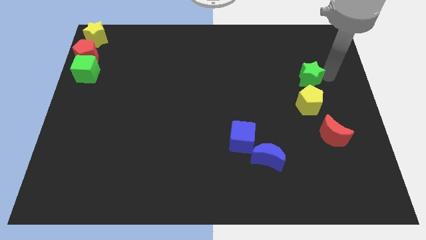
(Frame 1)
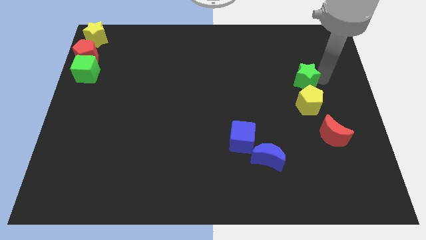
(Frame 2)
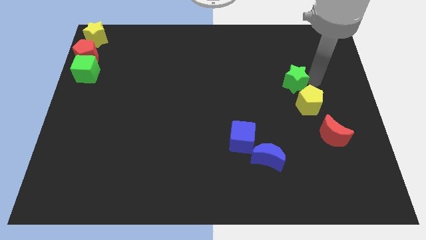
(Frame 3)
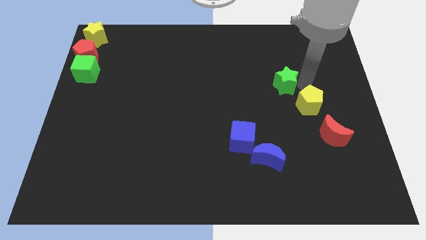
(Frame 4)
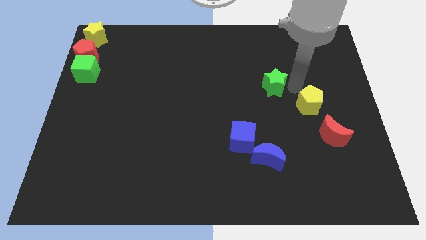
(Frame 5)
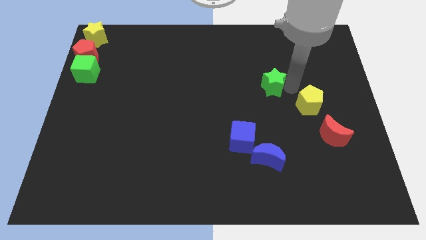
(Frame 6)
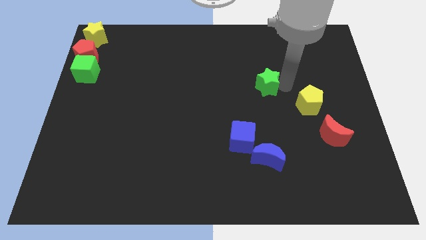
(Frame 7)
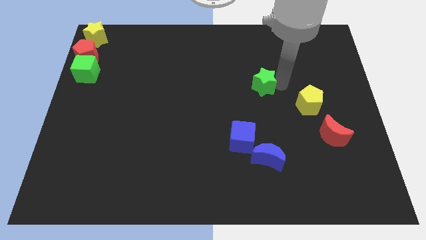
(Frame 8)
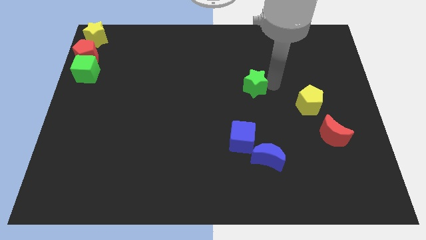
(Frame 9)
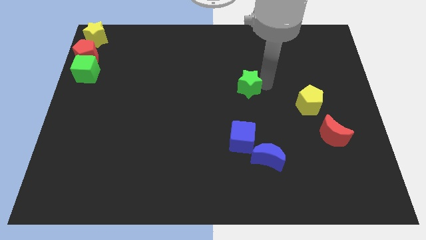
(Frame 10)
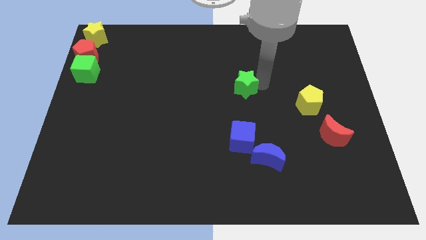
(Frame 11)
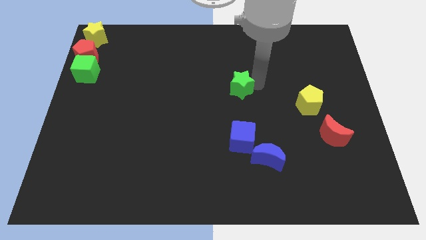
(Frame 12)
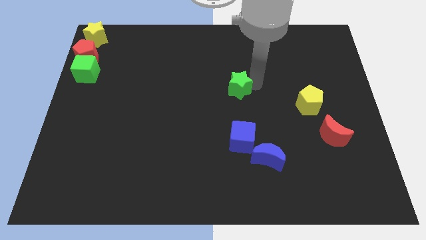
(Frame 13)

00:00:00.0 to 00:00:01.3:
move the green star to the top of the blue cube

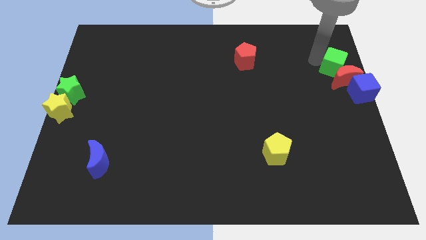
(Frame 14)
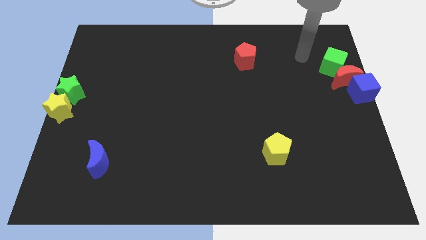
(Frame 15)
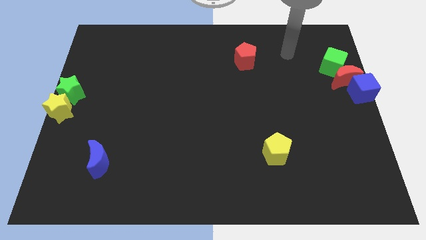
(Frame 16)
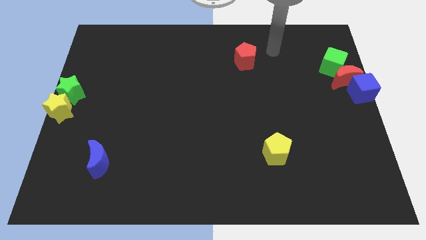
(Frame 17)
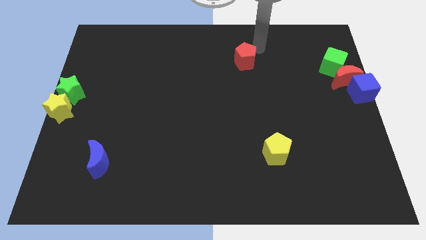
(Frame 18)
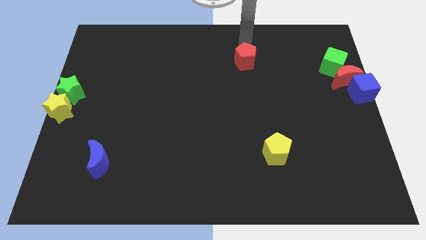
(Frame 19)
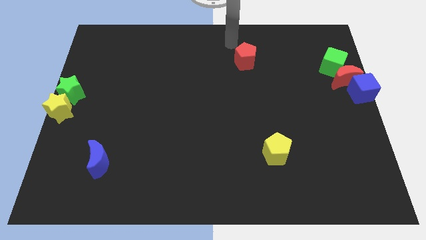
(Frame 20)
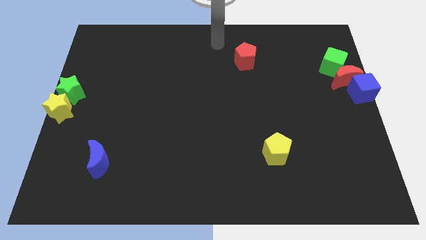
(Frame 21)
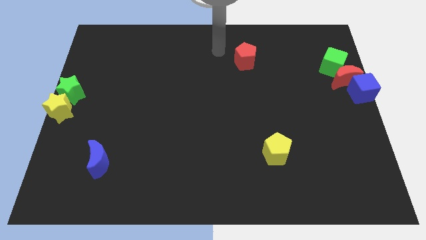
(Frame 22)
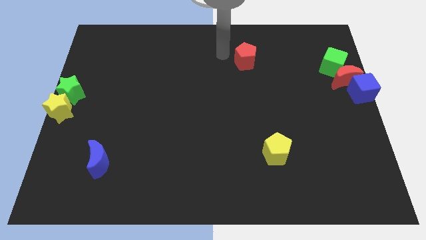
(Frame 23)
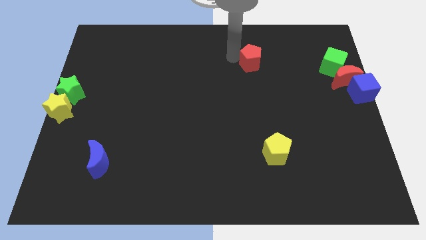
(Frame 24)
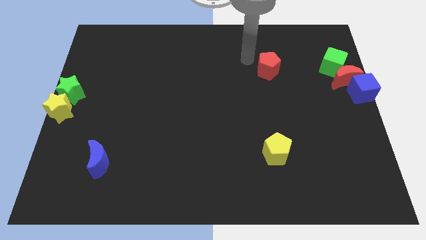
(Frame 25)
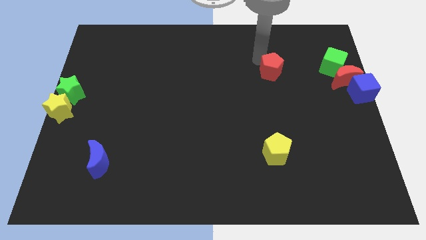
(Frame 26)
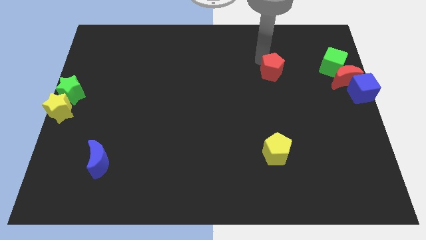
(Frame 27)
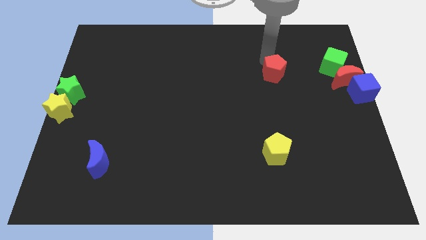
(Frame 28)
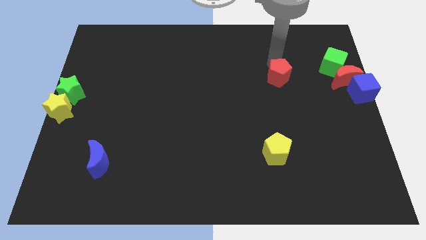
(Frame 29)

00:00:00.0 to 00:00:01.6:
move red pentagon parallel to the left of the green cube

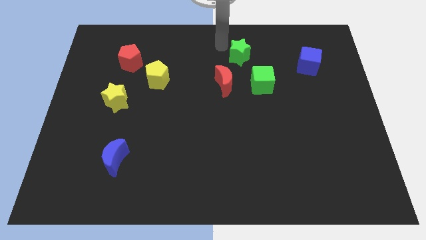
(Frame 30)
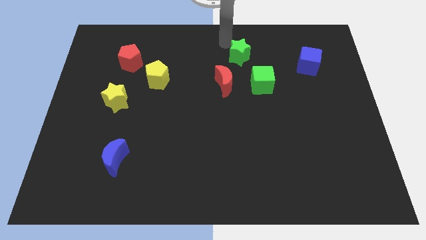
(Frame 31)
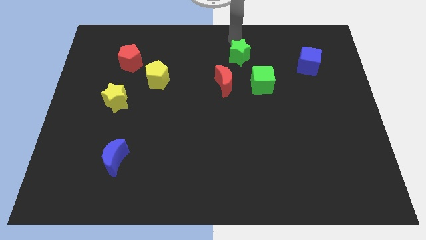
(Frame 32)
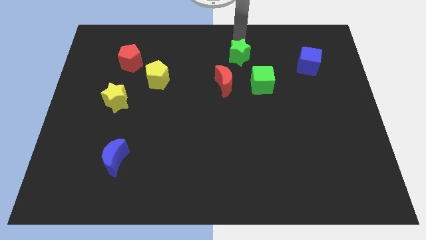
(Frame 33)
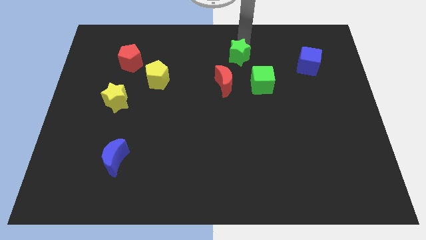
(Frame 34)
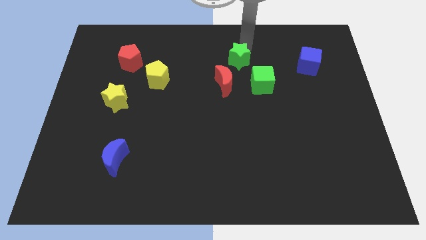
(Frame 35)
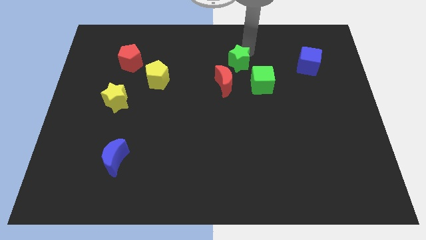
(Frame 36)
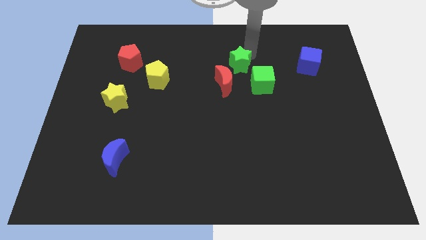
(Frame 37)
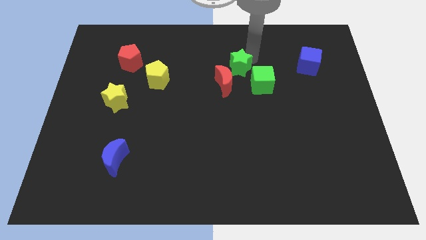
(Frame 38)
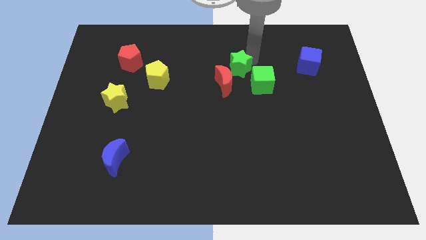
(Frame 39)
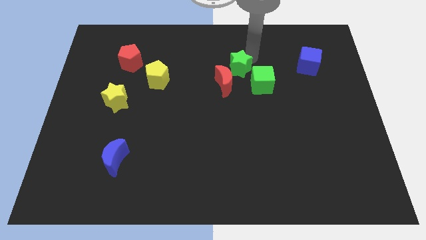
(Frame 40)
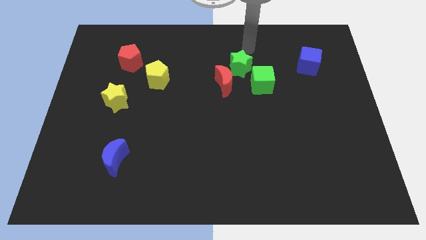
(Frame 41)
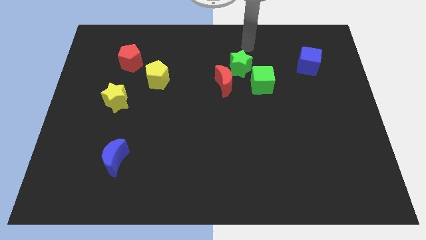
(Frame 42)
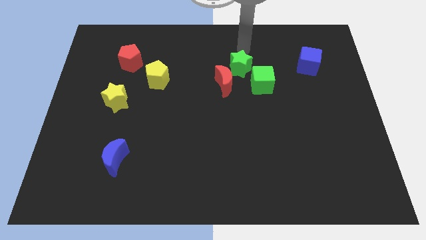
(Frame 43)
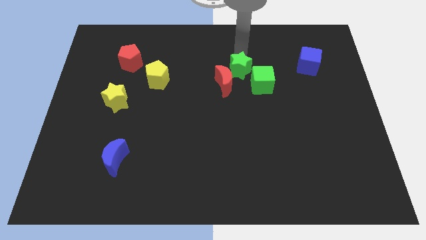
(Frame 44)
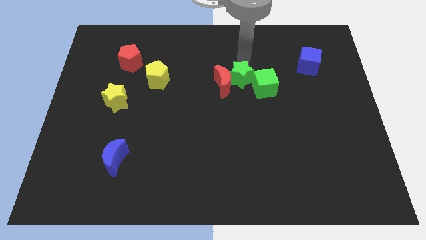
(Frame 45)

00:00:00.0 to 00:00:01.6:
move the green star in between the green cube and red moon

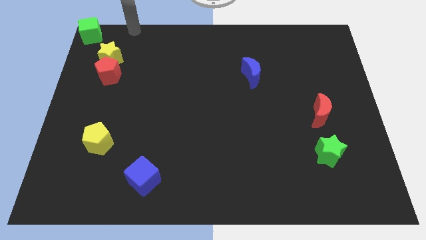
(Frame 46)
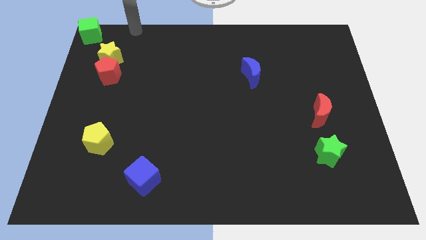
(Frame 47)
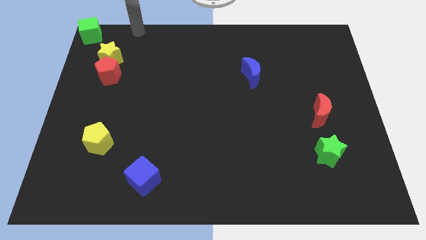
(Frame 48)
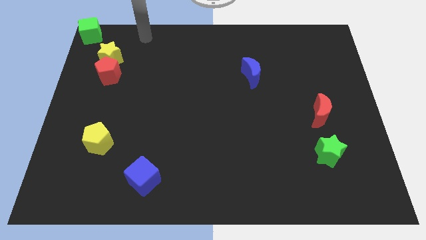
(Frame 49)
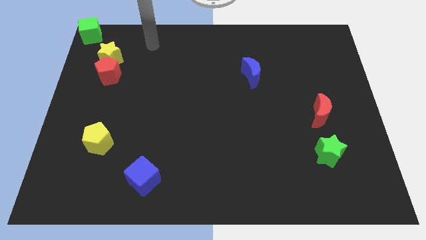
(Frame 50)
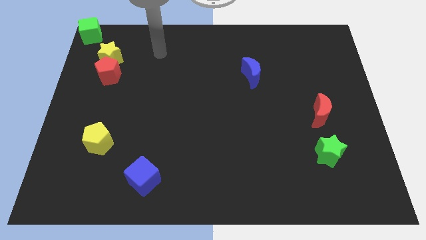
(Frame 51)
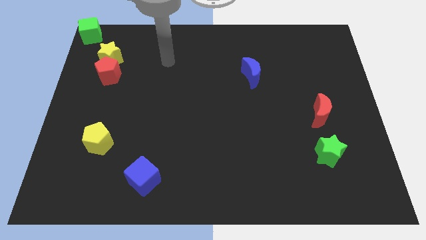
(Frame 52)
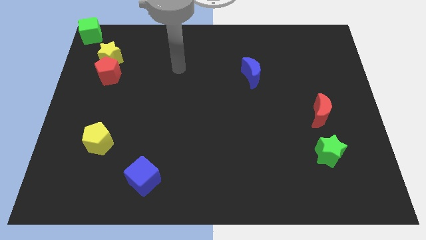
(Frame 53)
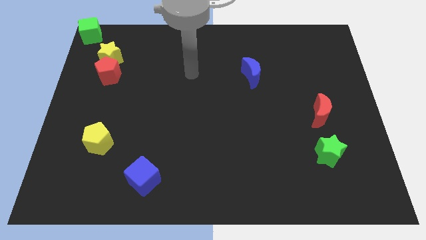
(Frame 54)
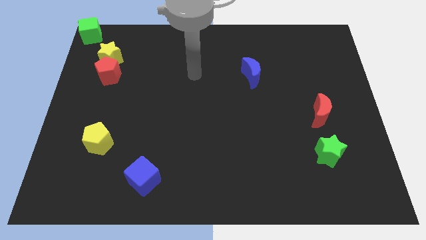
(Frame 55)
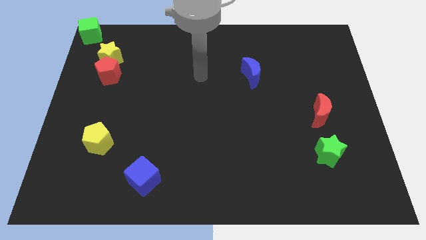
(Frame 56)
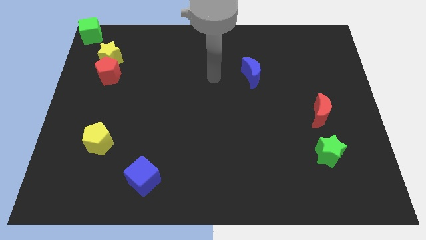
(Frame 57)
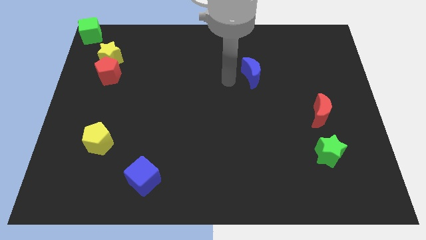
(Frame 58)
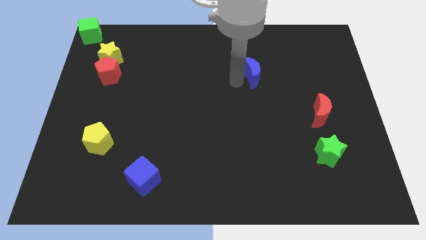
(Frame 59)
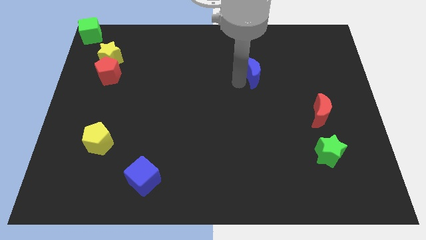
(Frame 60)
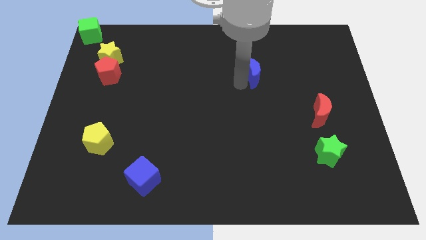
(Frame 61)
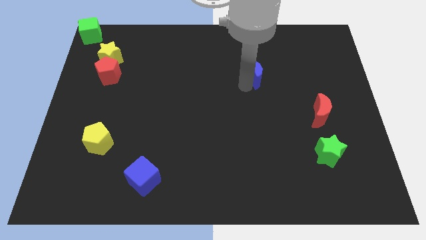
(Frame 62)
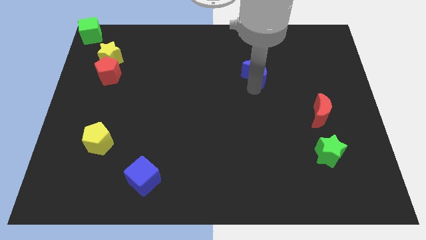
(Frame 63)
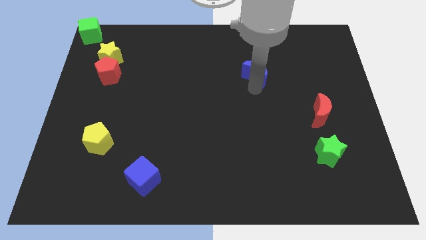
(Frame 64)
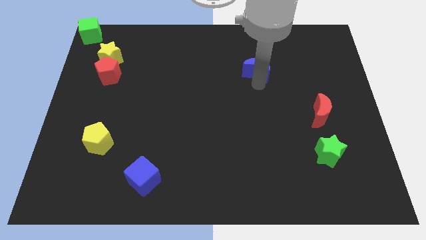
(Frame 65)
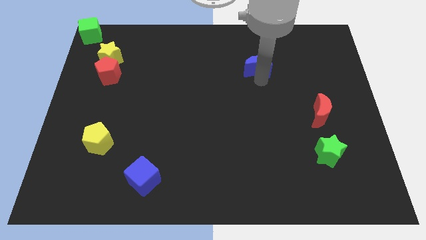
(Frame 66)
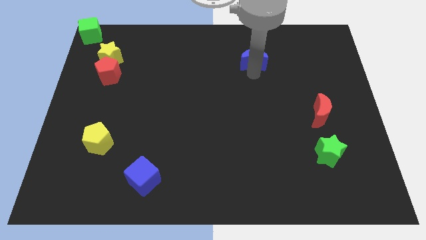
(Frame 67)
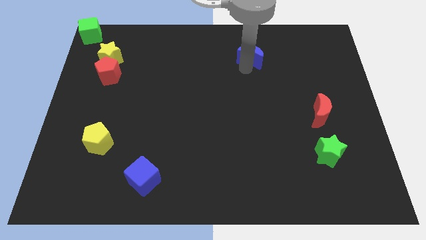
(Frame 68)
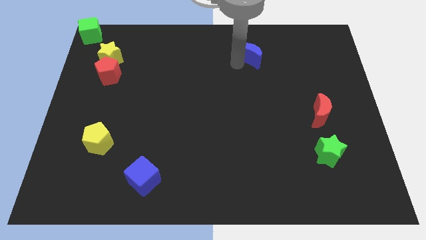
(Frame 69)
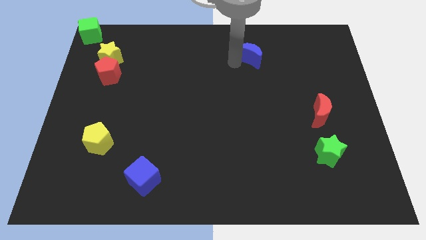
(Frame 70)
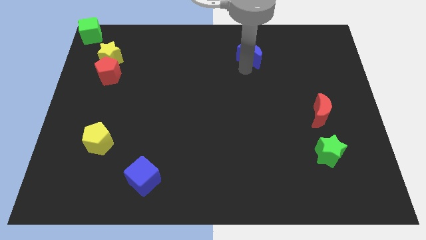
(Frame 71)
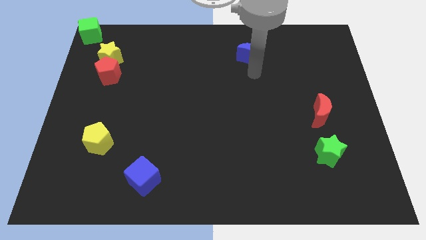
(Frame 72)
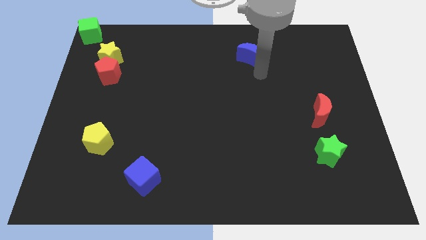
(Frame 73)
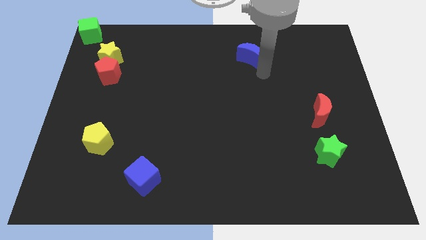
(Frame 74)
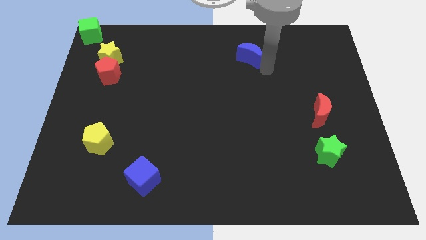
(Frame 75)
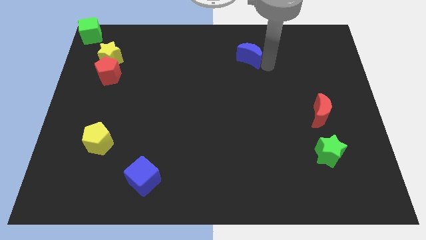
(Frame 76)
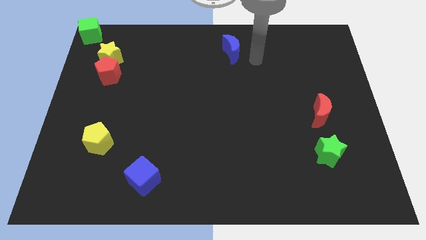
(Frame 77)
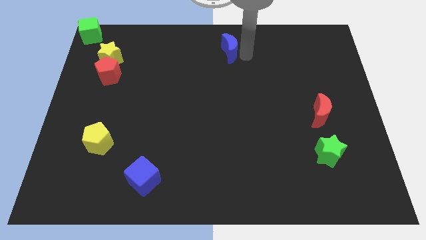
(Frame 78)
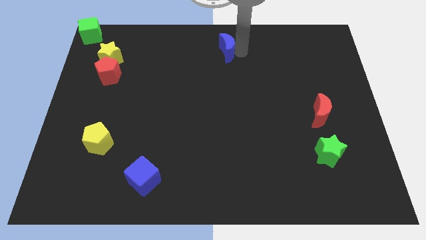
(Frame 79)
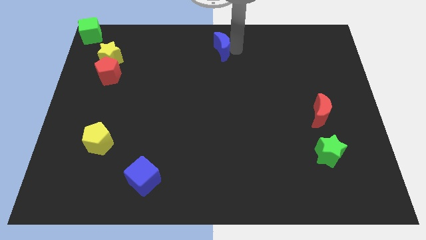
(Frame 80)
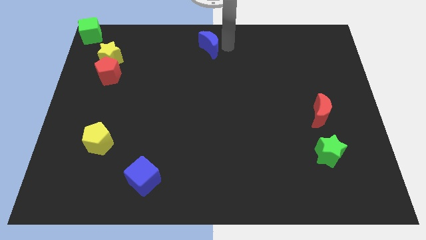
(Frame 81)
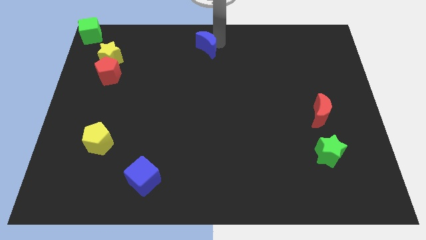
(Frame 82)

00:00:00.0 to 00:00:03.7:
move blue moon diagonally up

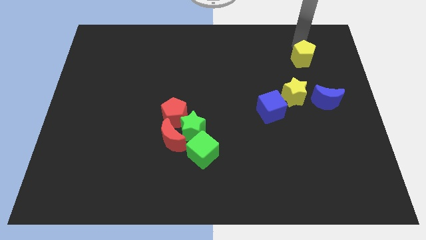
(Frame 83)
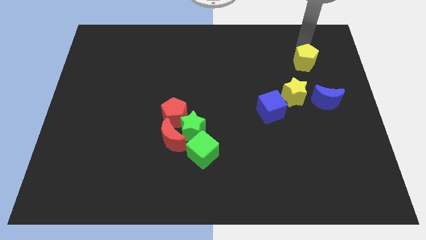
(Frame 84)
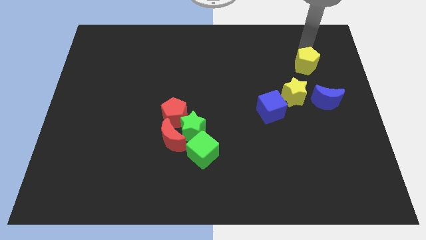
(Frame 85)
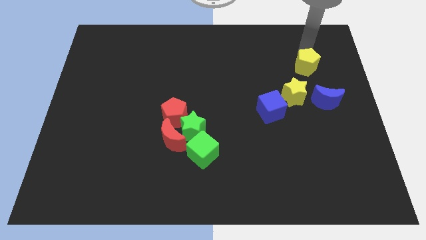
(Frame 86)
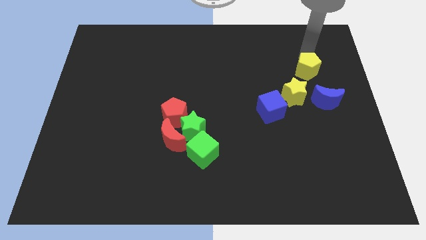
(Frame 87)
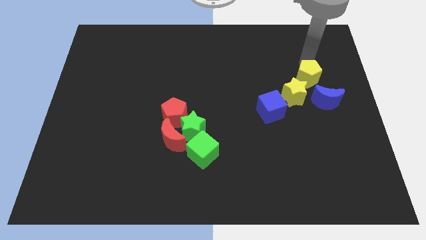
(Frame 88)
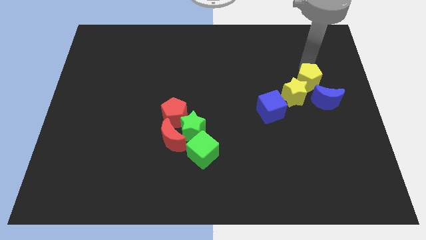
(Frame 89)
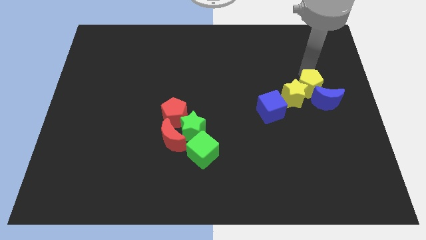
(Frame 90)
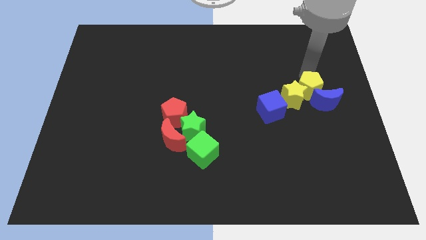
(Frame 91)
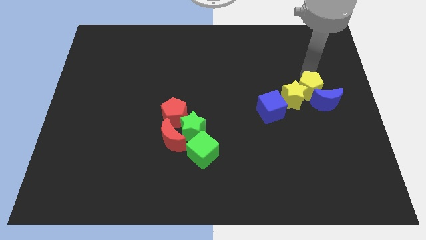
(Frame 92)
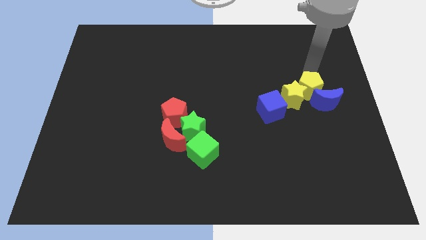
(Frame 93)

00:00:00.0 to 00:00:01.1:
place the yellow pentagon at the top right side of yellow star
